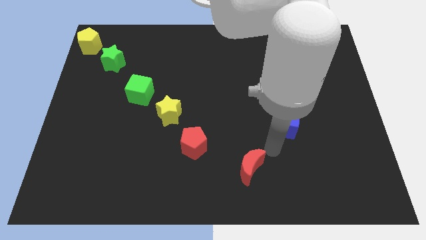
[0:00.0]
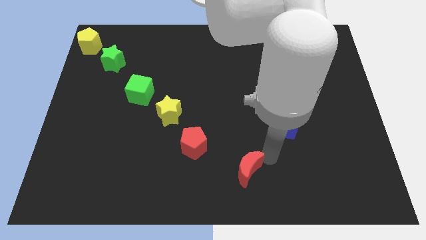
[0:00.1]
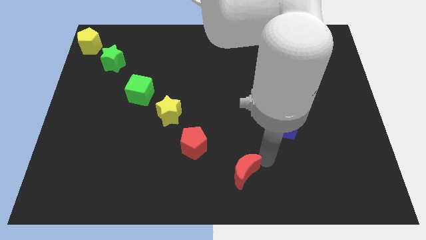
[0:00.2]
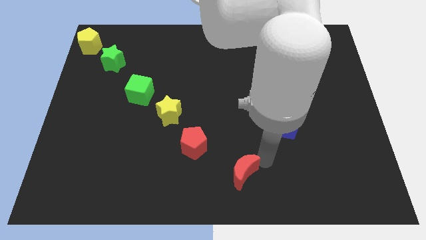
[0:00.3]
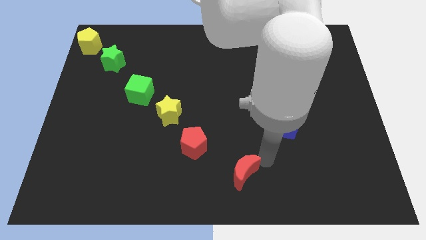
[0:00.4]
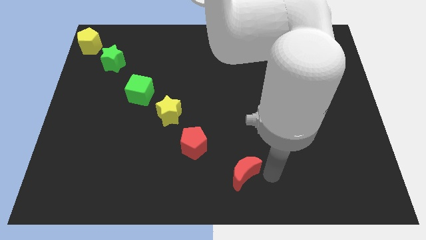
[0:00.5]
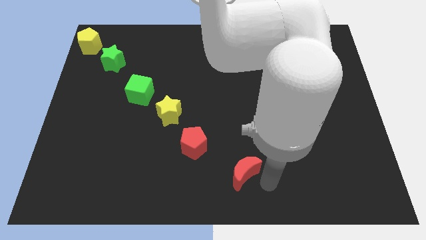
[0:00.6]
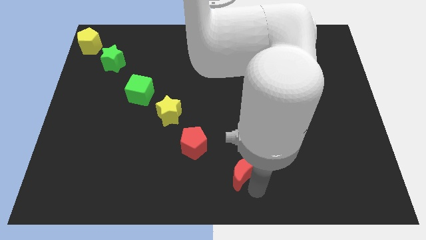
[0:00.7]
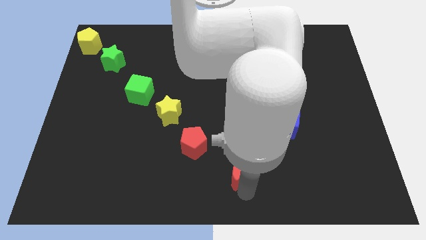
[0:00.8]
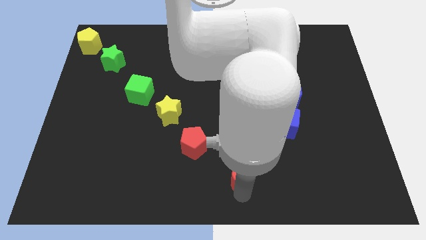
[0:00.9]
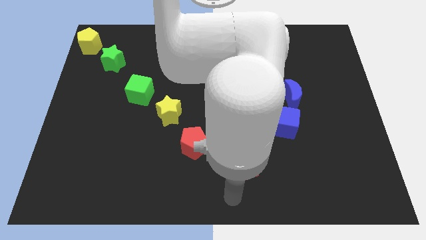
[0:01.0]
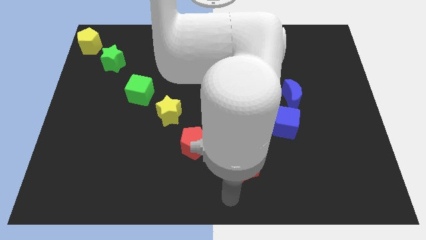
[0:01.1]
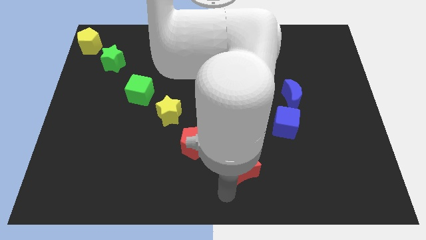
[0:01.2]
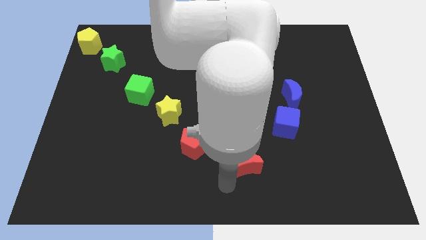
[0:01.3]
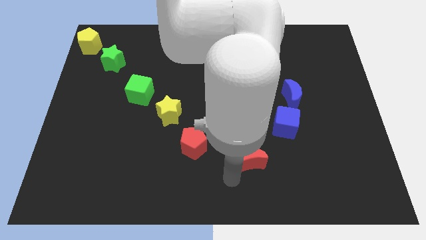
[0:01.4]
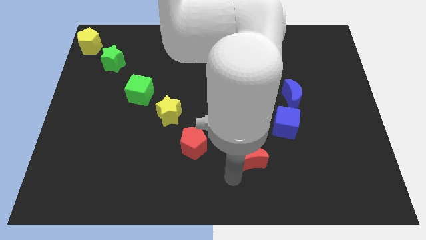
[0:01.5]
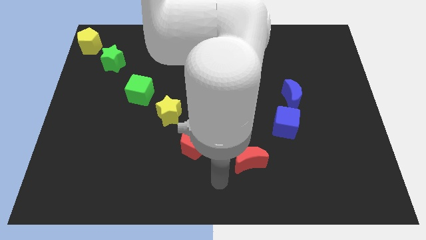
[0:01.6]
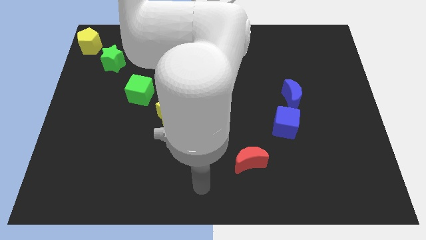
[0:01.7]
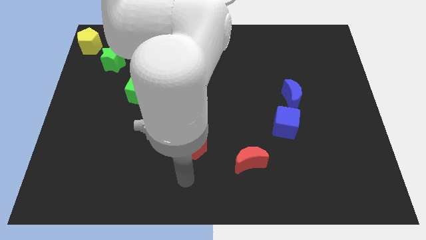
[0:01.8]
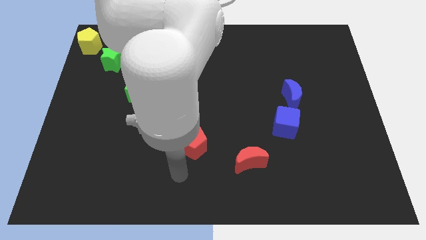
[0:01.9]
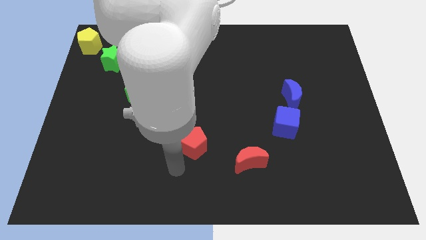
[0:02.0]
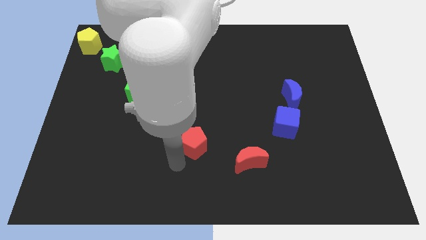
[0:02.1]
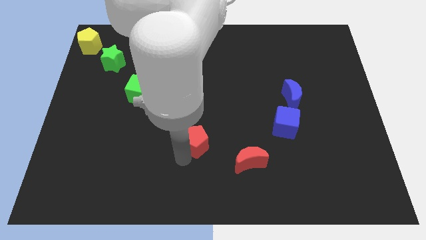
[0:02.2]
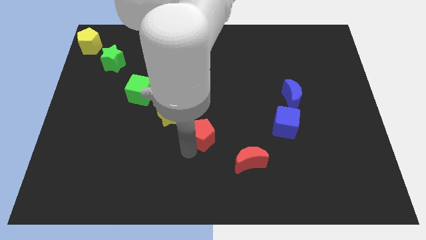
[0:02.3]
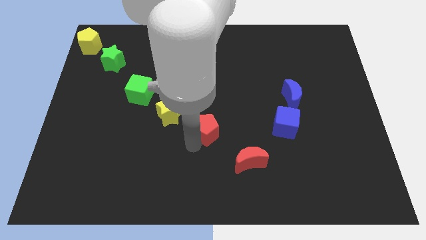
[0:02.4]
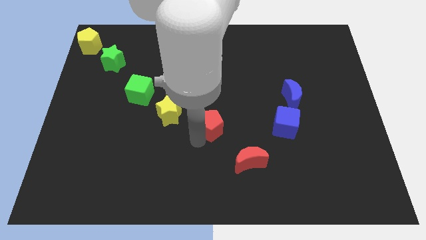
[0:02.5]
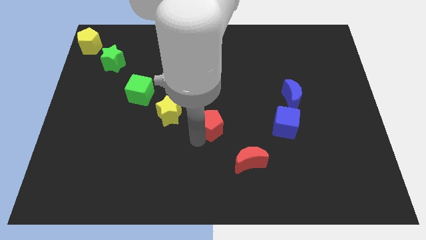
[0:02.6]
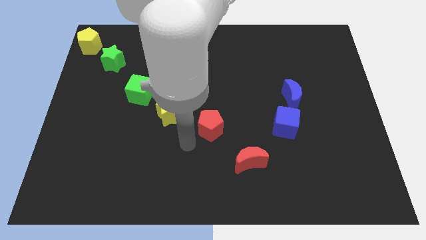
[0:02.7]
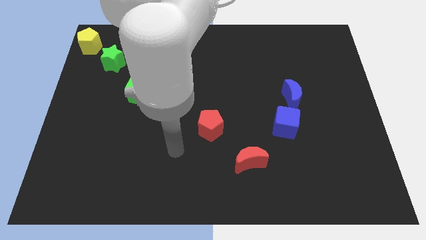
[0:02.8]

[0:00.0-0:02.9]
move the red pentagon upward

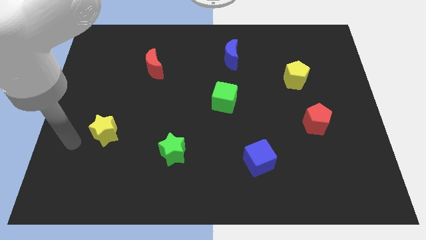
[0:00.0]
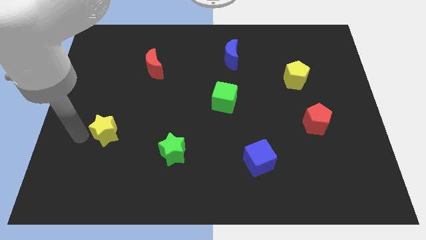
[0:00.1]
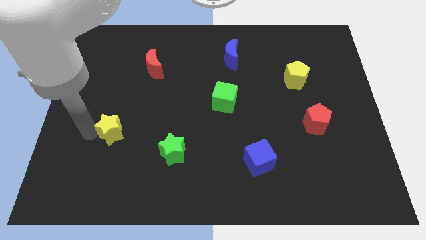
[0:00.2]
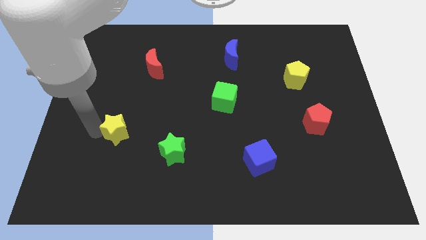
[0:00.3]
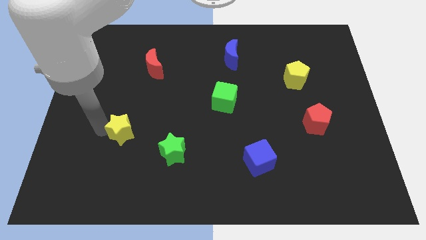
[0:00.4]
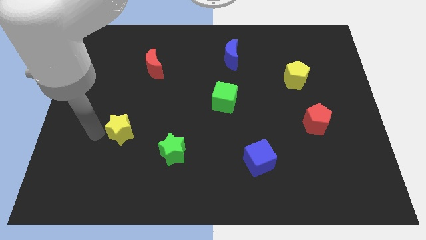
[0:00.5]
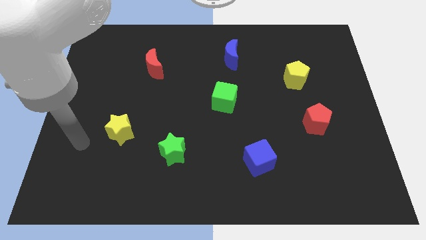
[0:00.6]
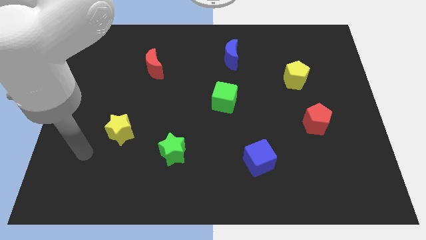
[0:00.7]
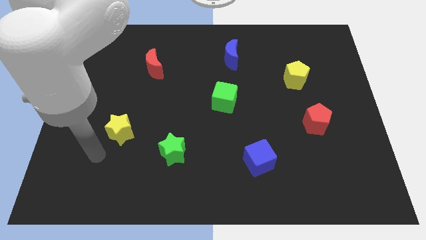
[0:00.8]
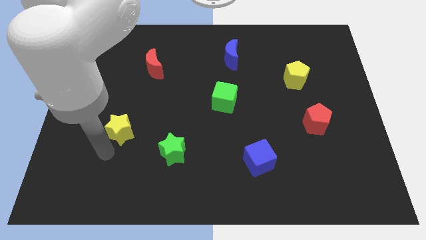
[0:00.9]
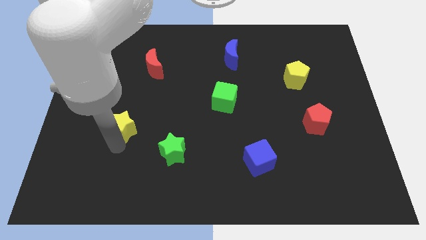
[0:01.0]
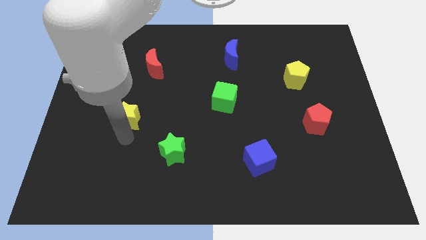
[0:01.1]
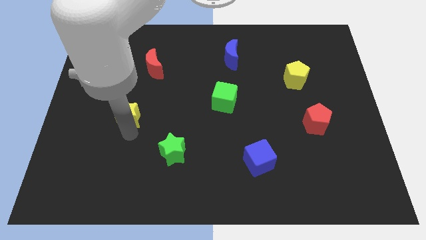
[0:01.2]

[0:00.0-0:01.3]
push yellow star slightly up

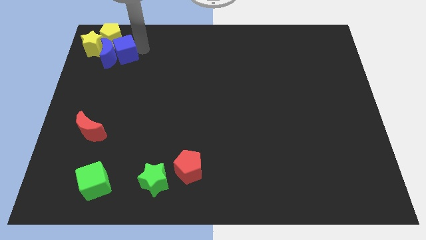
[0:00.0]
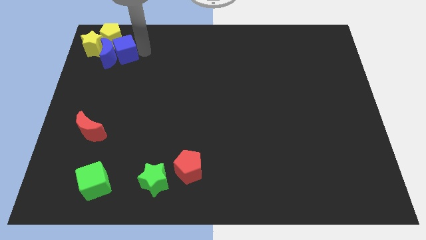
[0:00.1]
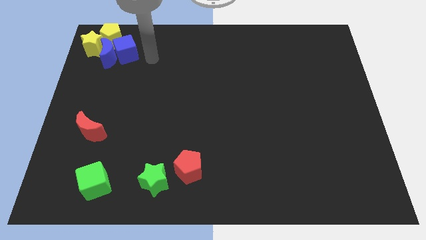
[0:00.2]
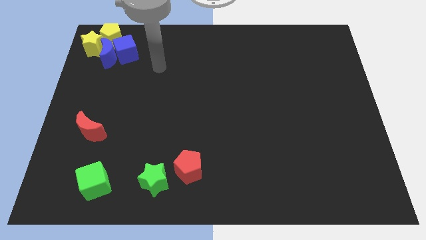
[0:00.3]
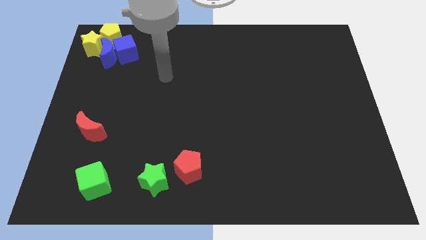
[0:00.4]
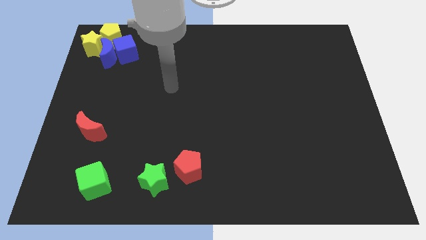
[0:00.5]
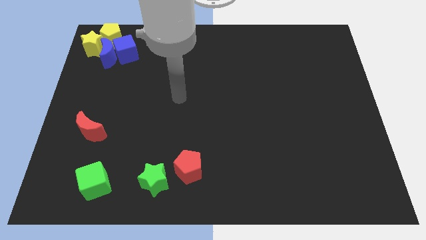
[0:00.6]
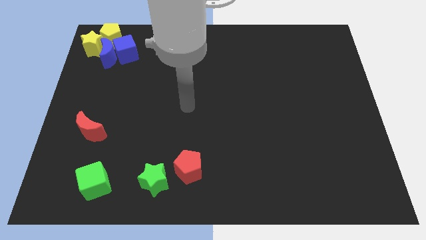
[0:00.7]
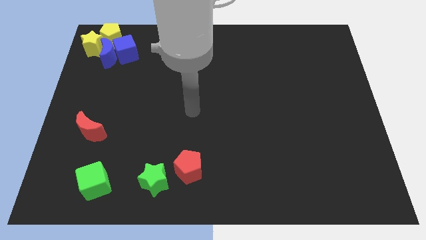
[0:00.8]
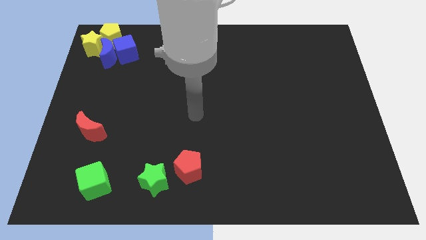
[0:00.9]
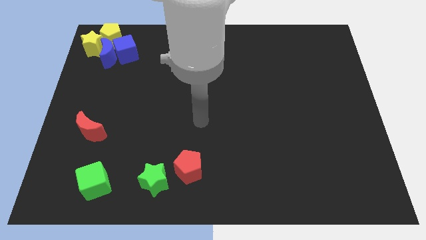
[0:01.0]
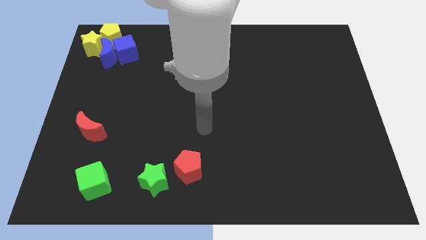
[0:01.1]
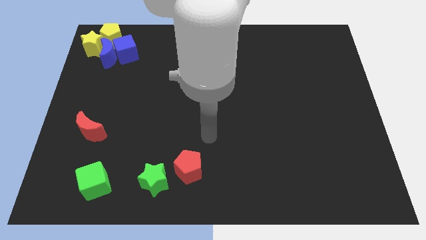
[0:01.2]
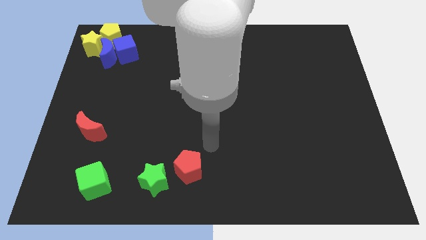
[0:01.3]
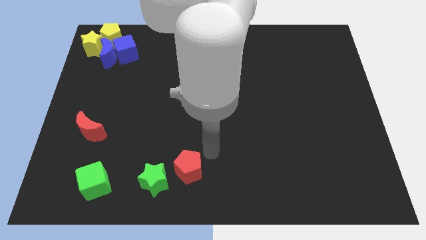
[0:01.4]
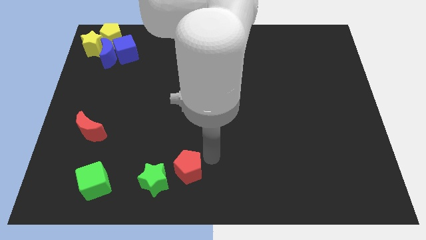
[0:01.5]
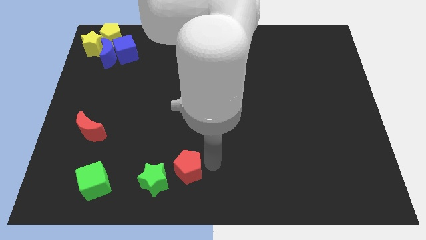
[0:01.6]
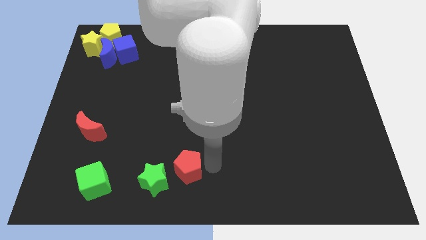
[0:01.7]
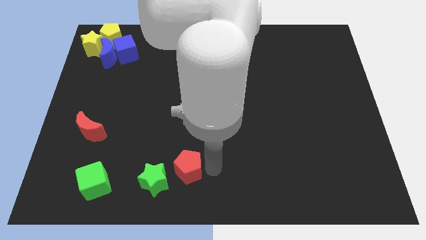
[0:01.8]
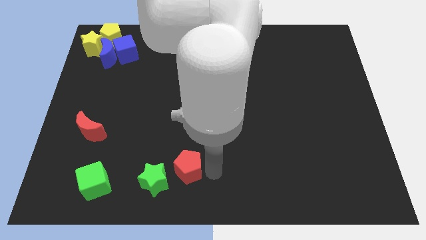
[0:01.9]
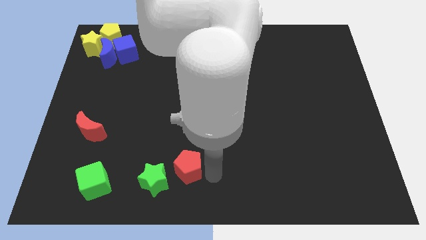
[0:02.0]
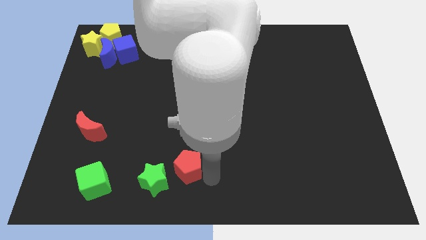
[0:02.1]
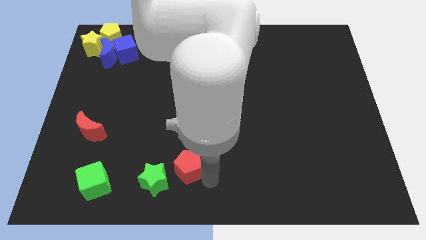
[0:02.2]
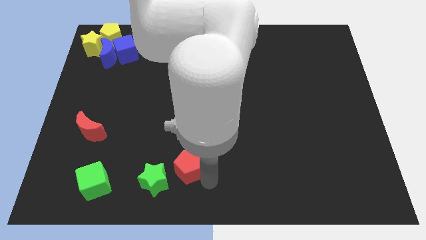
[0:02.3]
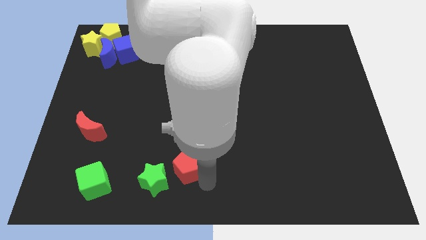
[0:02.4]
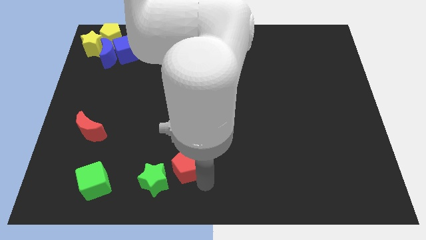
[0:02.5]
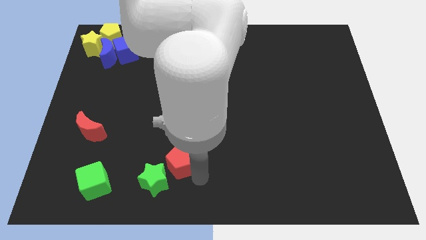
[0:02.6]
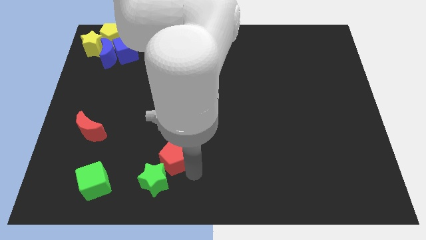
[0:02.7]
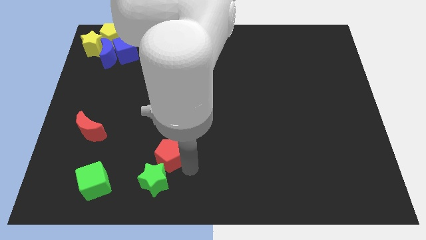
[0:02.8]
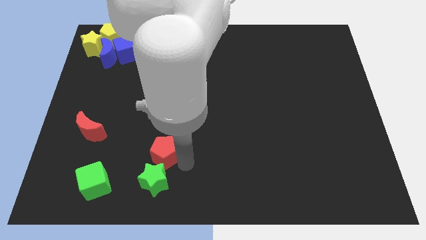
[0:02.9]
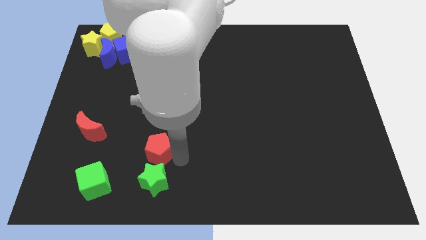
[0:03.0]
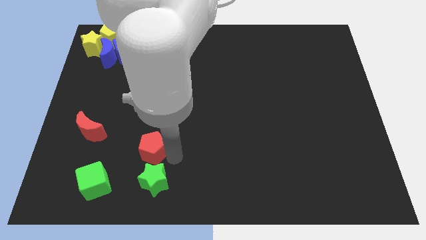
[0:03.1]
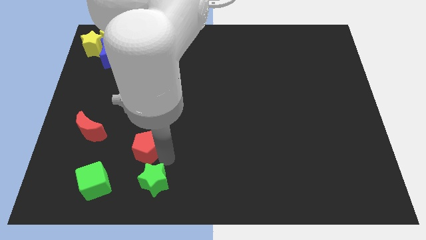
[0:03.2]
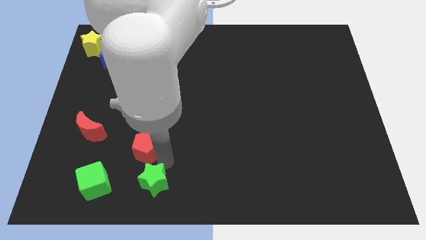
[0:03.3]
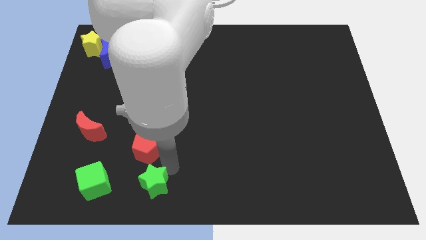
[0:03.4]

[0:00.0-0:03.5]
place the red pentagon above the green star

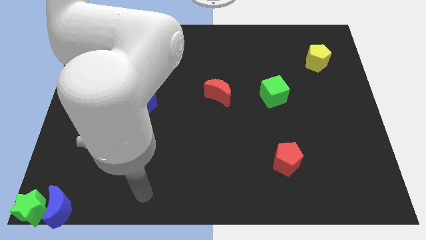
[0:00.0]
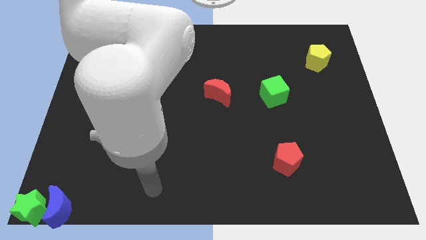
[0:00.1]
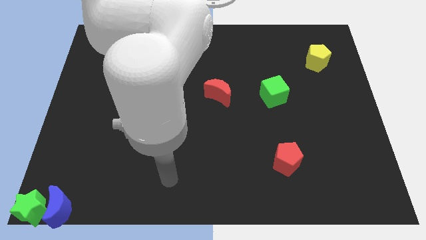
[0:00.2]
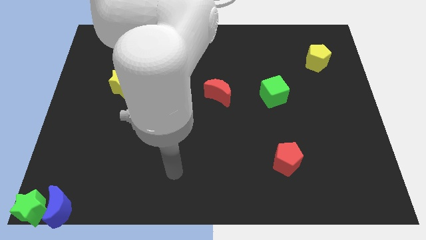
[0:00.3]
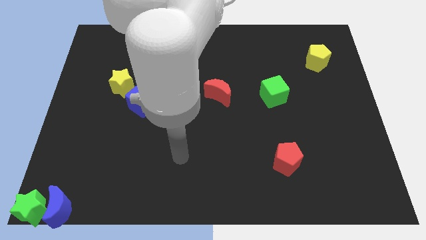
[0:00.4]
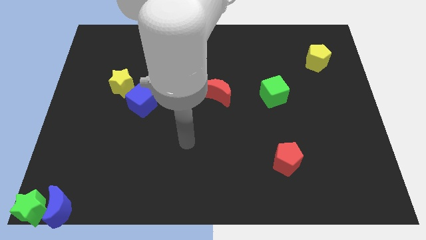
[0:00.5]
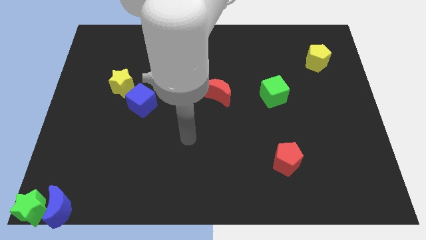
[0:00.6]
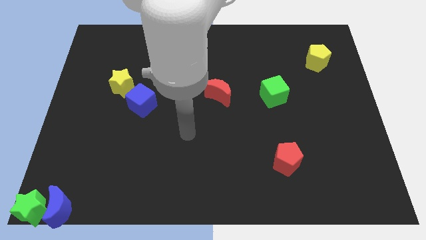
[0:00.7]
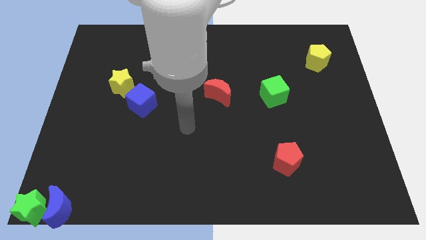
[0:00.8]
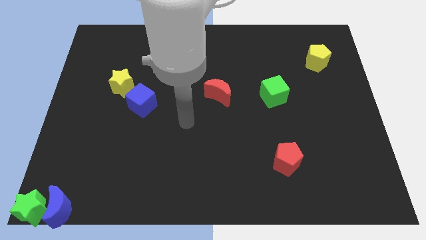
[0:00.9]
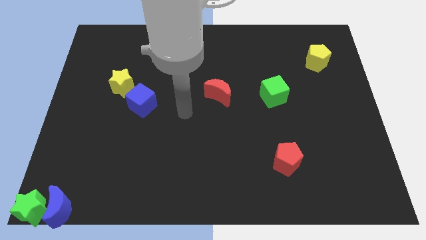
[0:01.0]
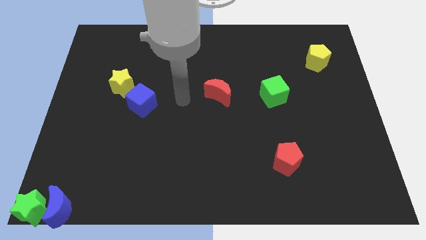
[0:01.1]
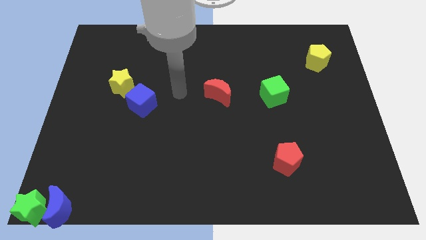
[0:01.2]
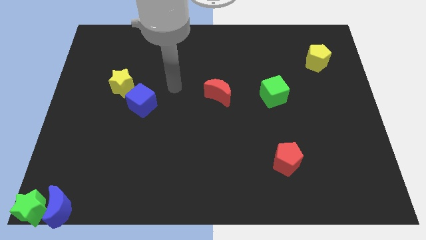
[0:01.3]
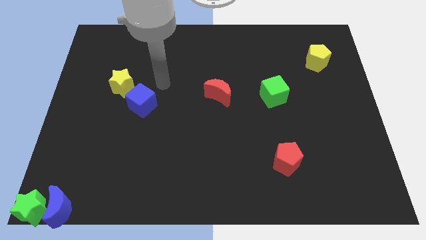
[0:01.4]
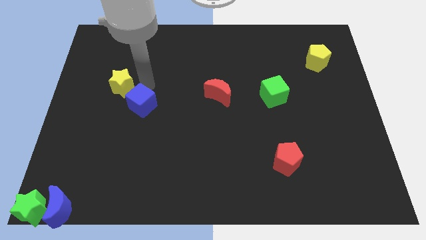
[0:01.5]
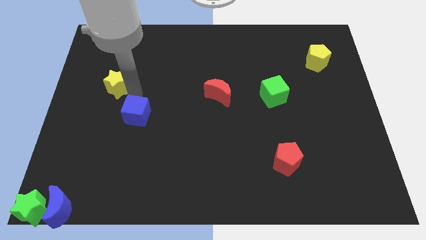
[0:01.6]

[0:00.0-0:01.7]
place the arm to the right of the yellow star
